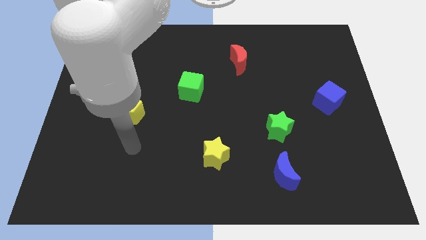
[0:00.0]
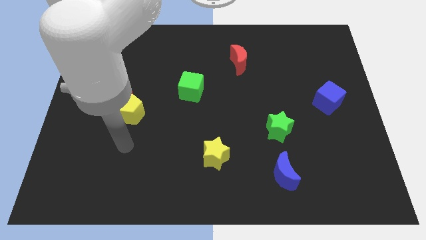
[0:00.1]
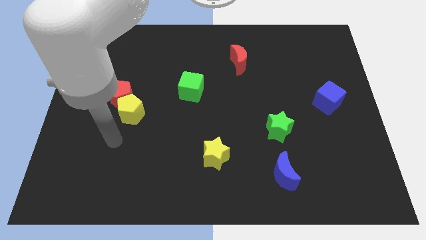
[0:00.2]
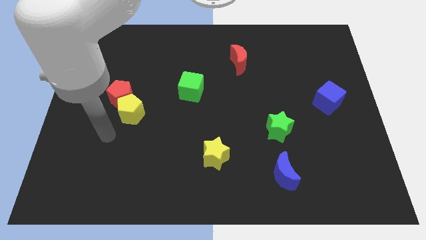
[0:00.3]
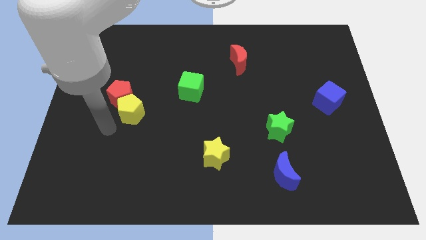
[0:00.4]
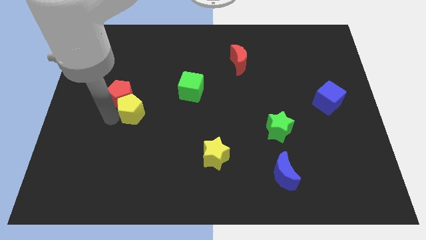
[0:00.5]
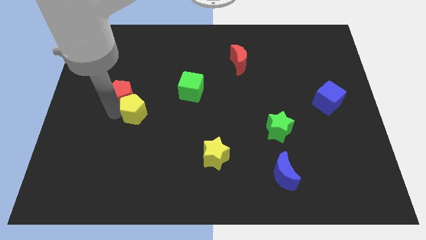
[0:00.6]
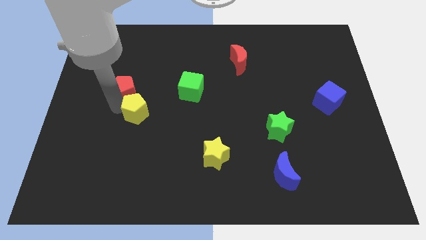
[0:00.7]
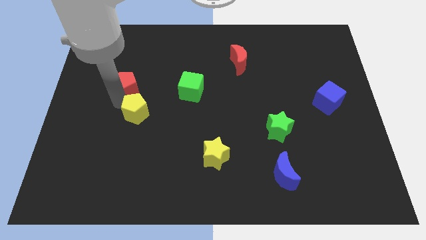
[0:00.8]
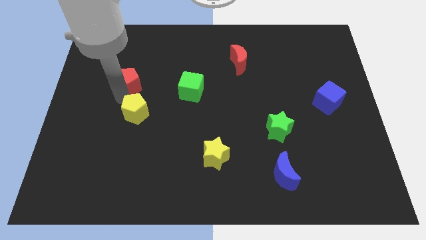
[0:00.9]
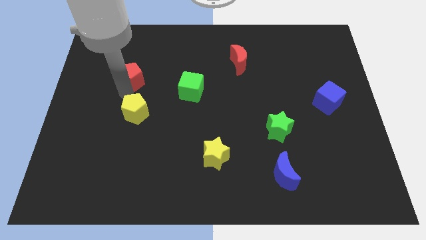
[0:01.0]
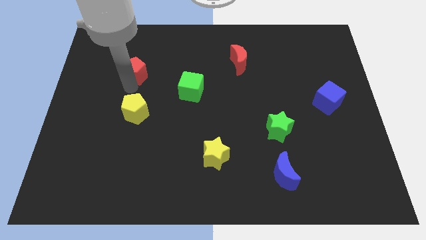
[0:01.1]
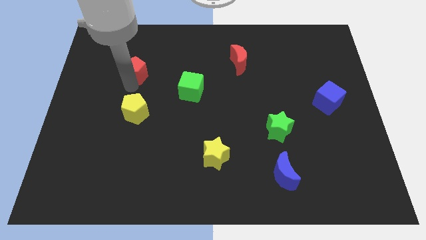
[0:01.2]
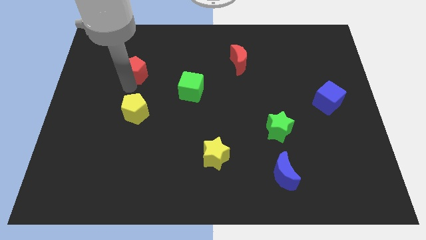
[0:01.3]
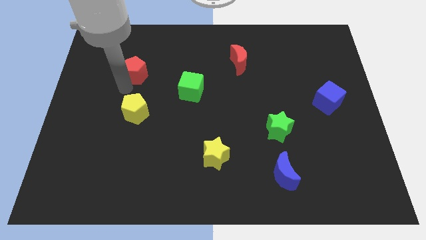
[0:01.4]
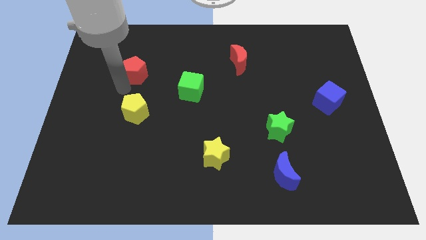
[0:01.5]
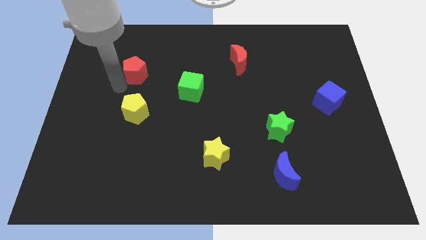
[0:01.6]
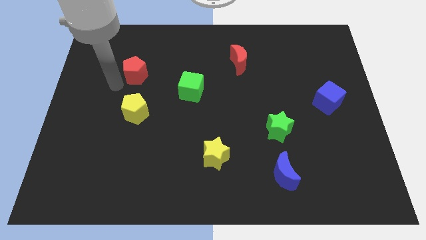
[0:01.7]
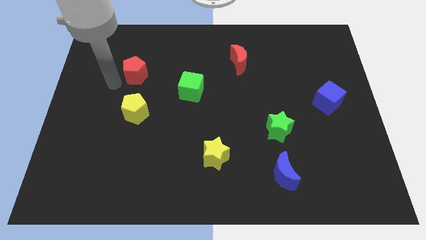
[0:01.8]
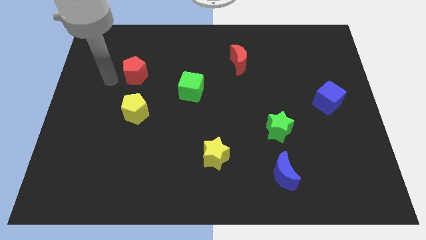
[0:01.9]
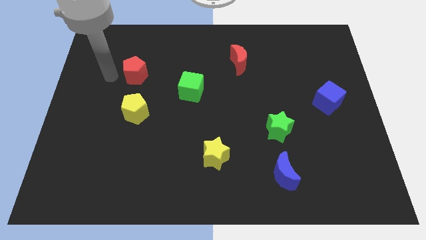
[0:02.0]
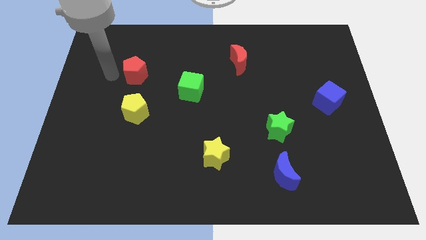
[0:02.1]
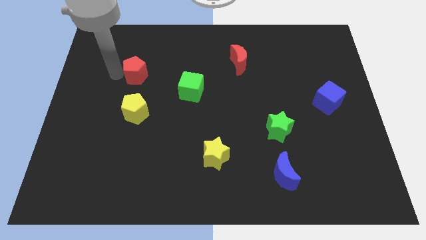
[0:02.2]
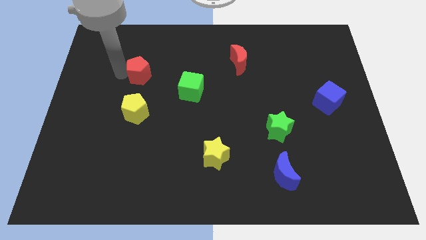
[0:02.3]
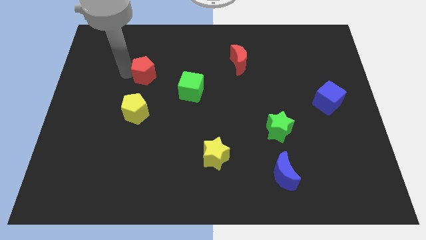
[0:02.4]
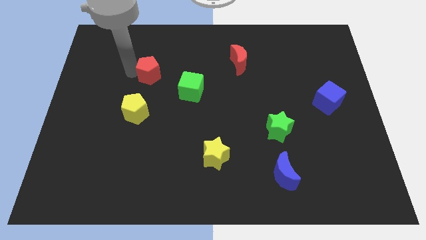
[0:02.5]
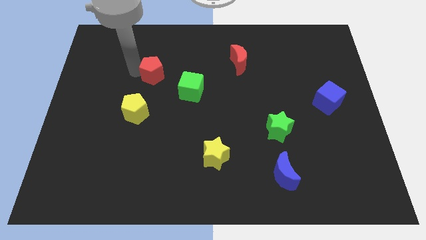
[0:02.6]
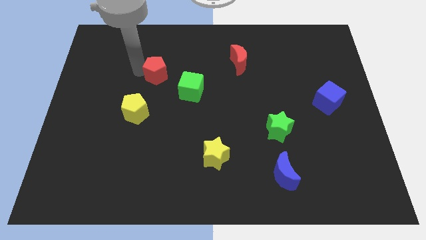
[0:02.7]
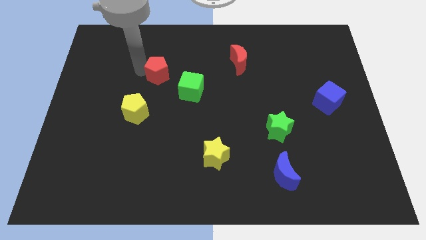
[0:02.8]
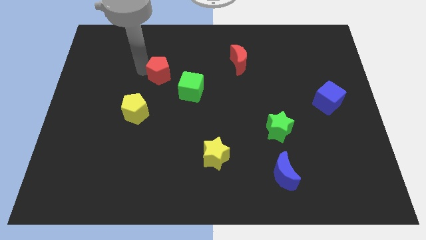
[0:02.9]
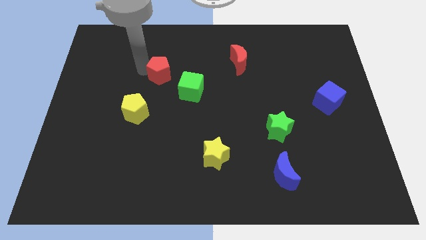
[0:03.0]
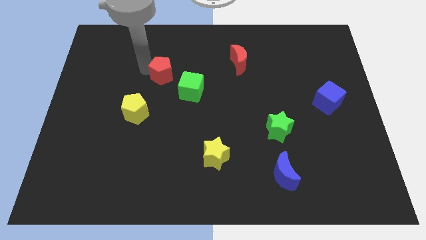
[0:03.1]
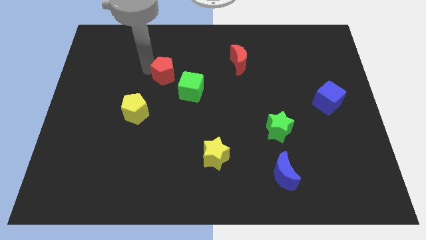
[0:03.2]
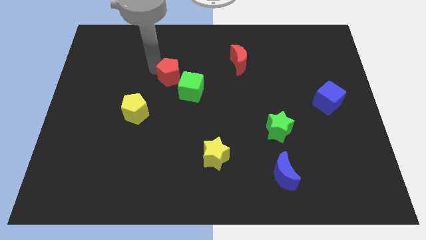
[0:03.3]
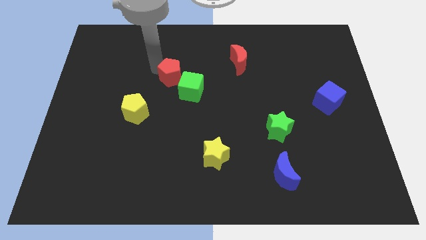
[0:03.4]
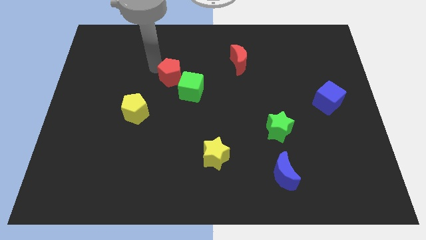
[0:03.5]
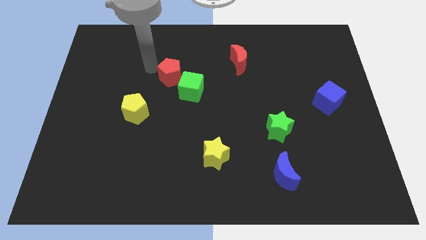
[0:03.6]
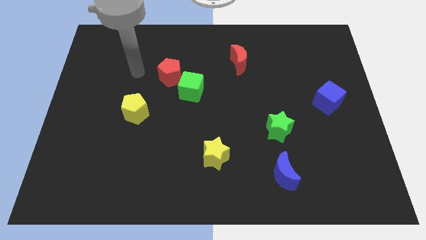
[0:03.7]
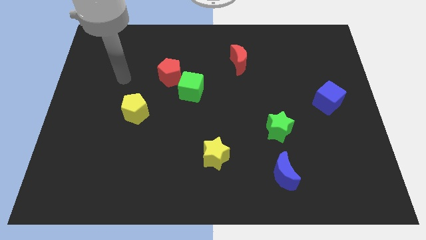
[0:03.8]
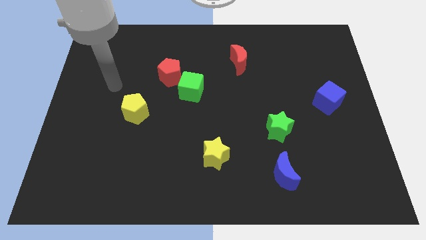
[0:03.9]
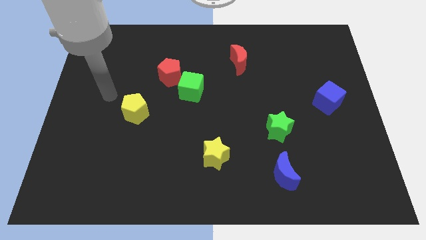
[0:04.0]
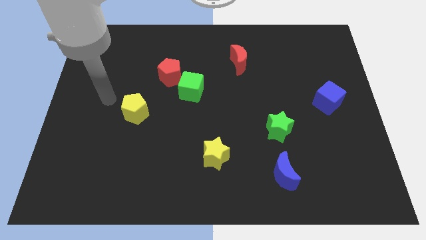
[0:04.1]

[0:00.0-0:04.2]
place the red pentagon beside the green cube

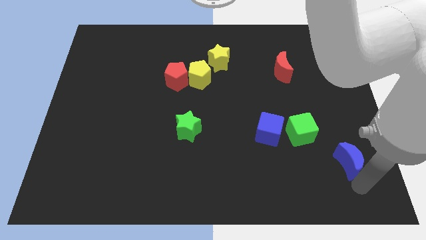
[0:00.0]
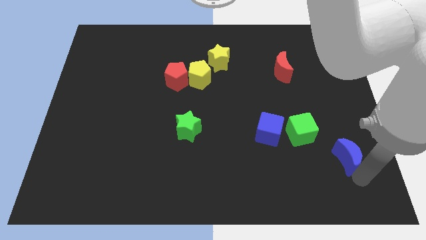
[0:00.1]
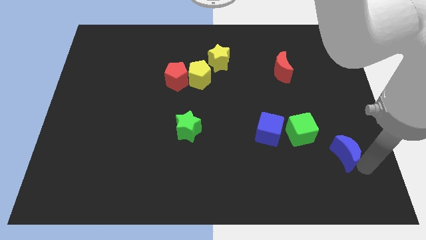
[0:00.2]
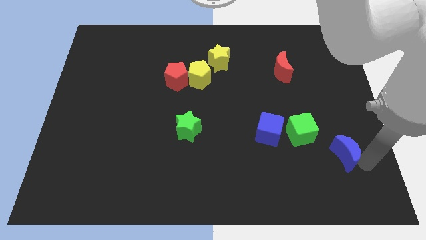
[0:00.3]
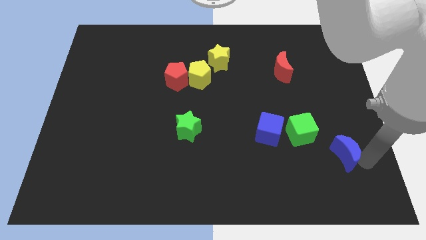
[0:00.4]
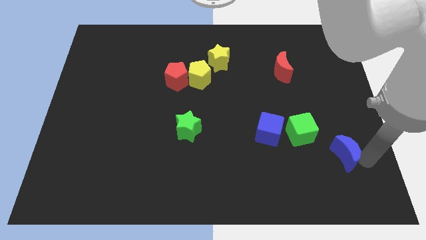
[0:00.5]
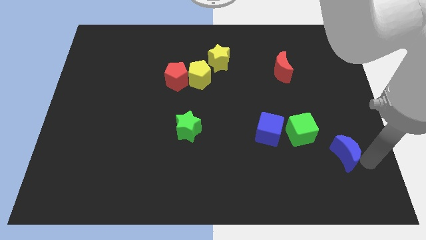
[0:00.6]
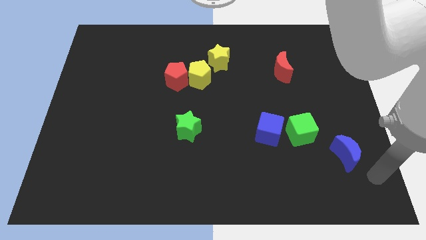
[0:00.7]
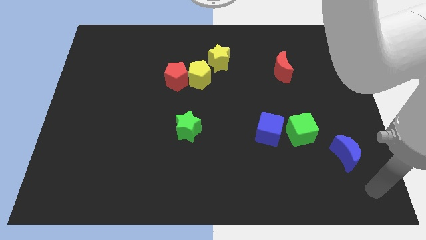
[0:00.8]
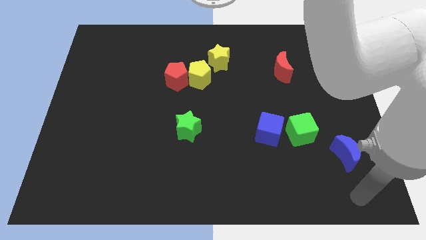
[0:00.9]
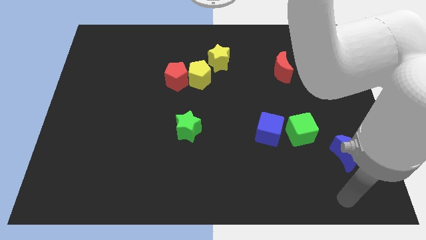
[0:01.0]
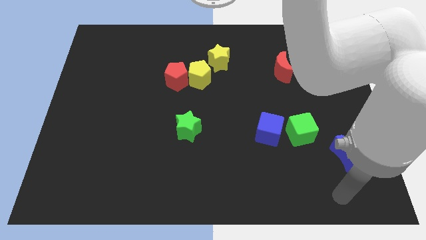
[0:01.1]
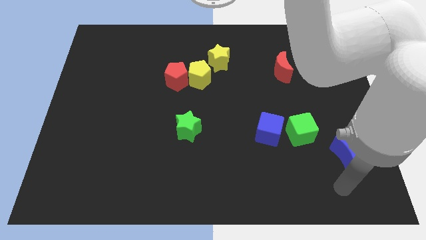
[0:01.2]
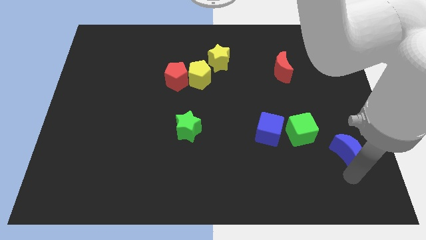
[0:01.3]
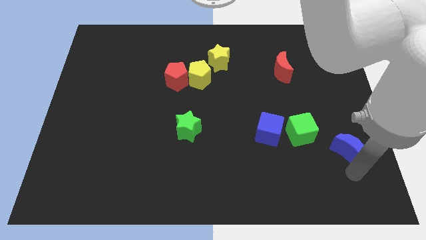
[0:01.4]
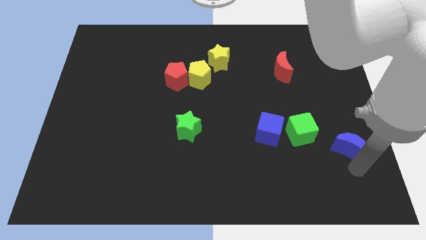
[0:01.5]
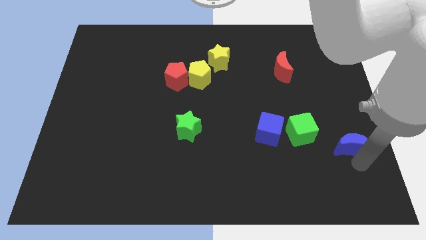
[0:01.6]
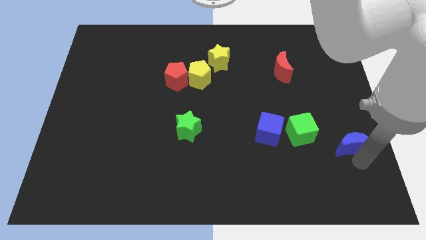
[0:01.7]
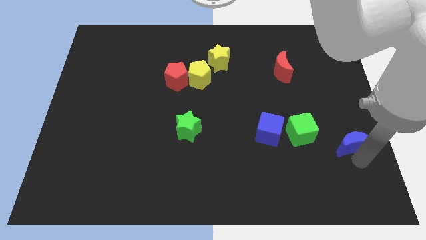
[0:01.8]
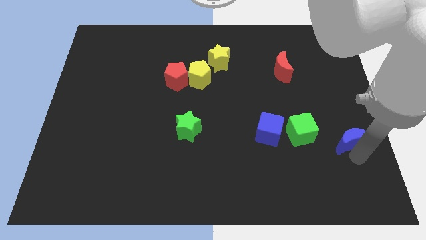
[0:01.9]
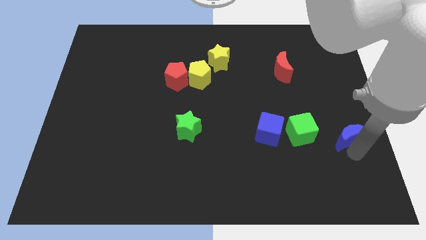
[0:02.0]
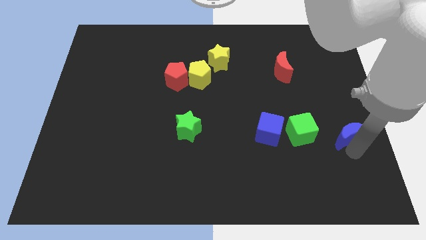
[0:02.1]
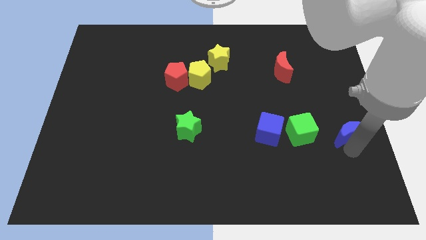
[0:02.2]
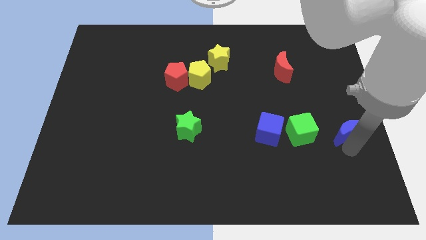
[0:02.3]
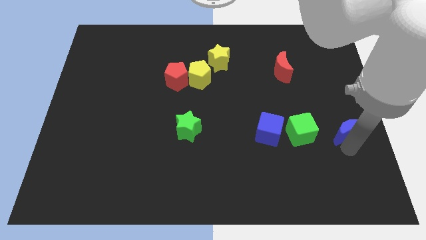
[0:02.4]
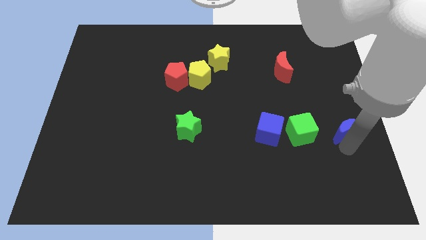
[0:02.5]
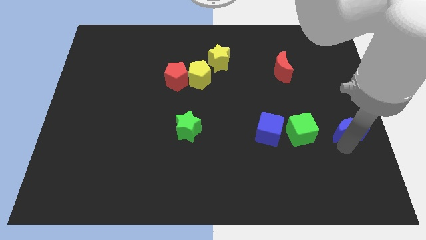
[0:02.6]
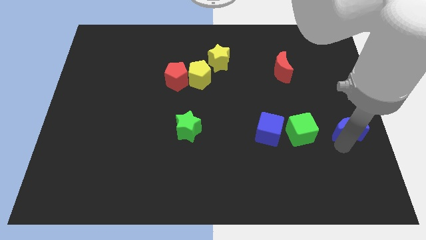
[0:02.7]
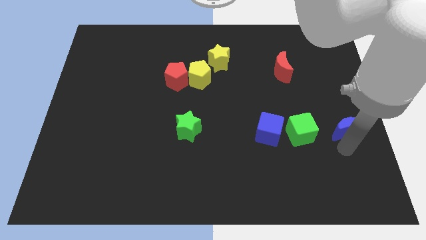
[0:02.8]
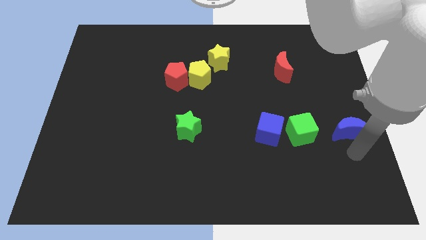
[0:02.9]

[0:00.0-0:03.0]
move the blue crescent towards the top side of the board a bit

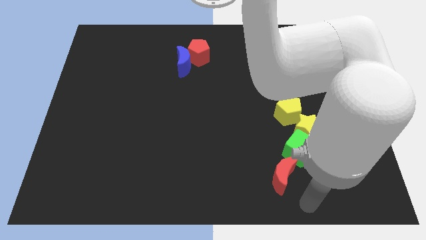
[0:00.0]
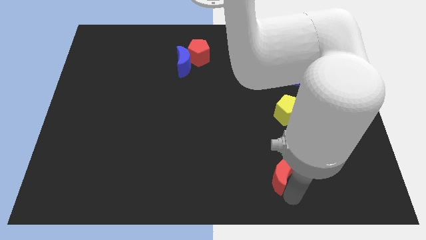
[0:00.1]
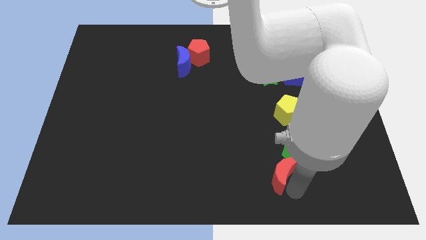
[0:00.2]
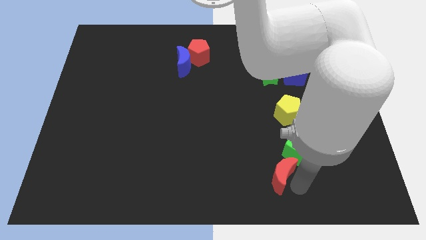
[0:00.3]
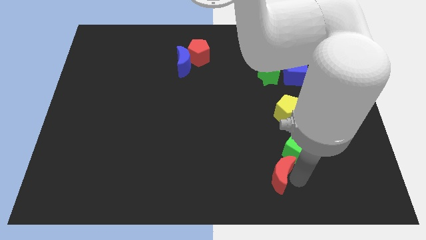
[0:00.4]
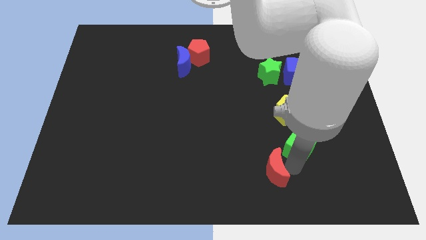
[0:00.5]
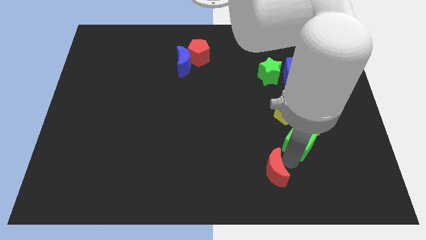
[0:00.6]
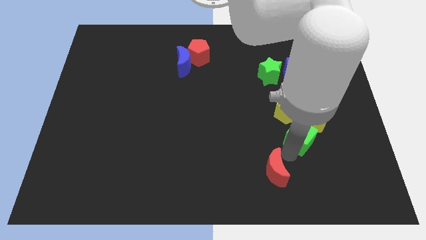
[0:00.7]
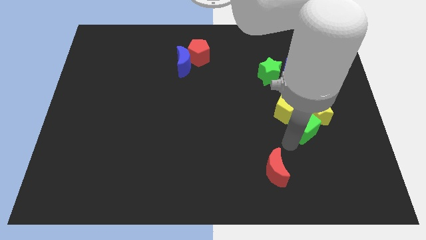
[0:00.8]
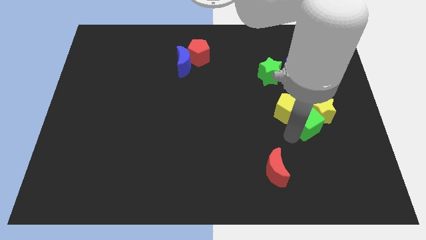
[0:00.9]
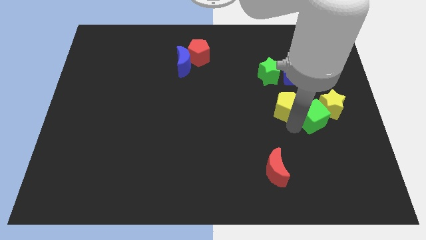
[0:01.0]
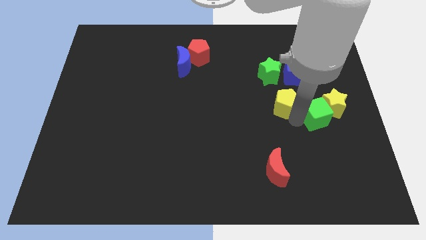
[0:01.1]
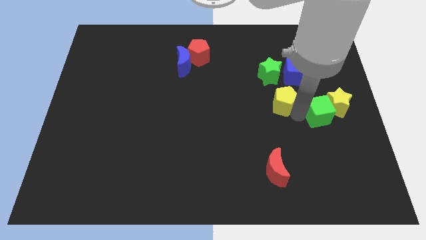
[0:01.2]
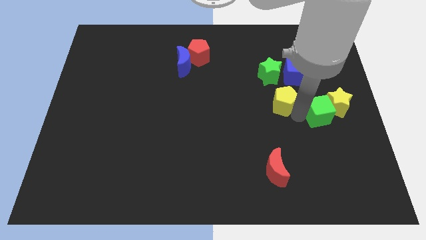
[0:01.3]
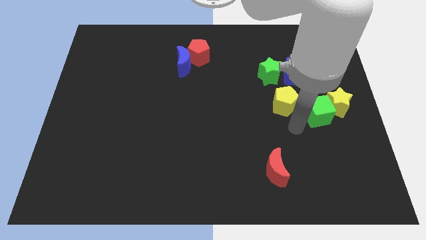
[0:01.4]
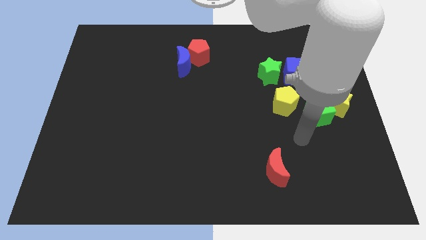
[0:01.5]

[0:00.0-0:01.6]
move away the green cube from the red moon

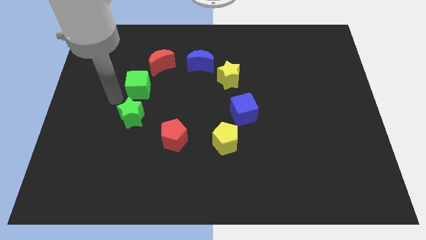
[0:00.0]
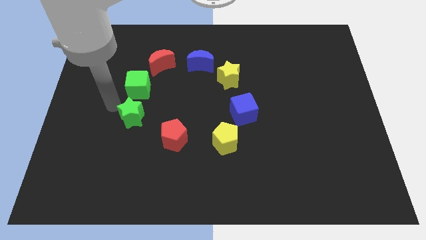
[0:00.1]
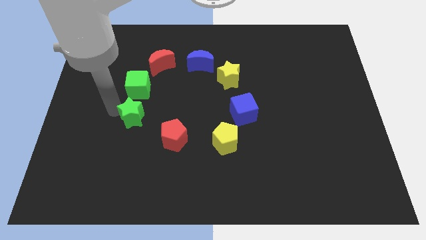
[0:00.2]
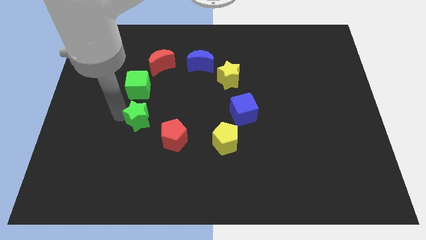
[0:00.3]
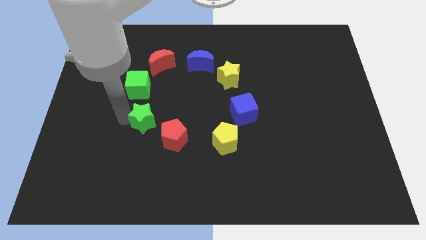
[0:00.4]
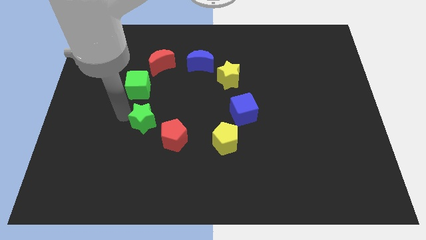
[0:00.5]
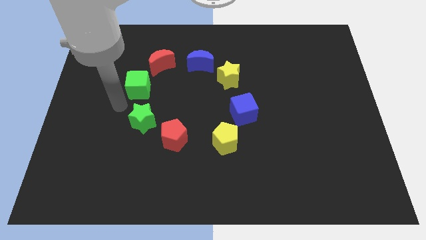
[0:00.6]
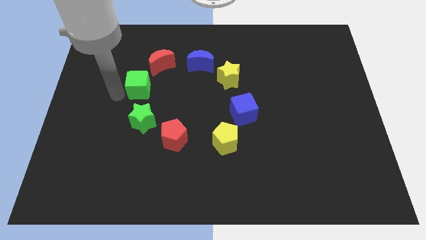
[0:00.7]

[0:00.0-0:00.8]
slightly move the green star towards the right
